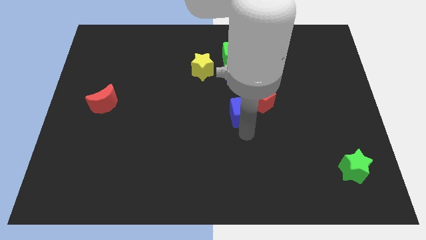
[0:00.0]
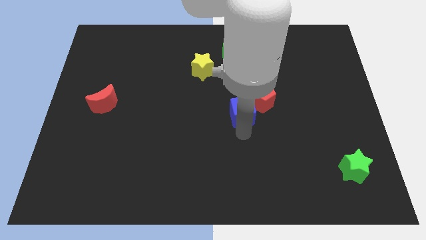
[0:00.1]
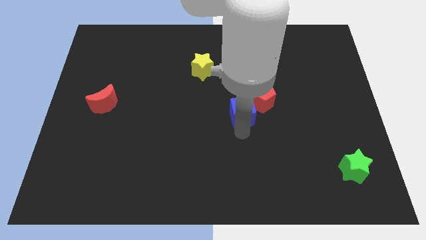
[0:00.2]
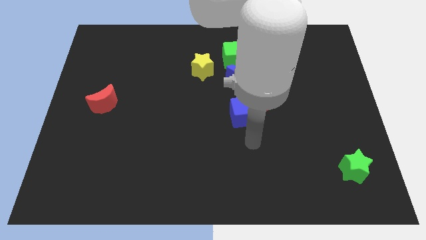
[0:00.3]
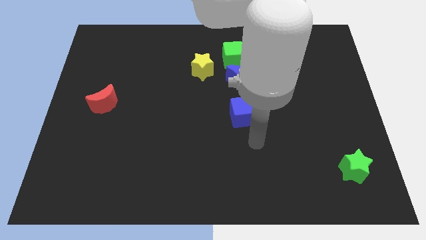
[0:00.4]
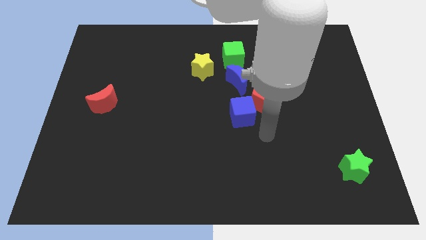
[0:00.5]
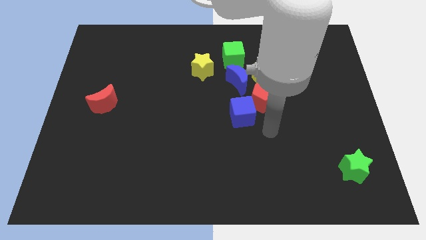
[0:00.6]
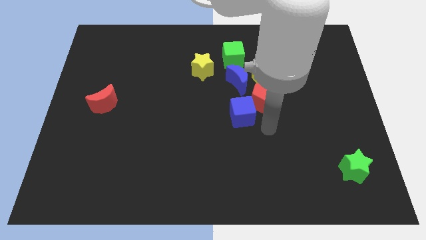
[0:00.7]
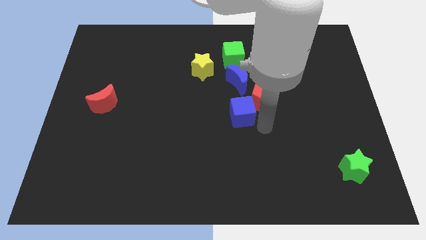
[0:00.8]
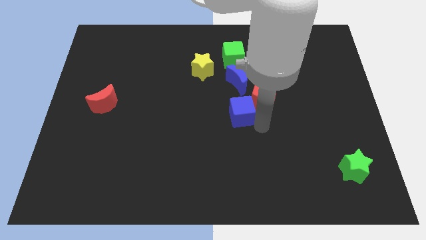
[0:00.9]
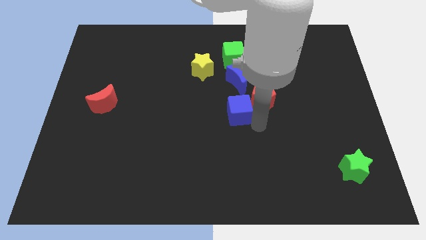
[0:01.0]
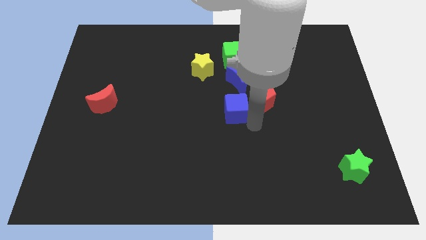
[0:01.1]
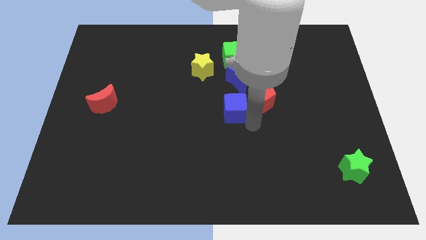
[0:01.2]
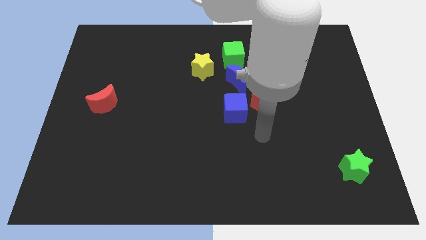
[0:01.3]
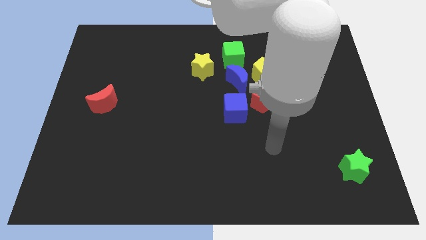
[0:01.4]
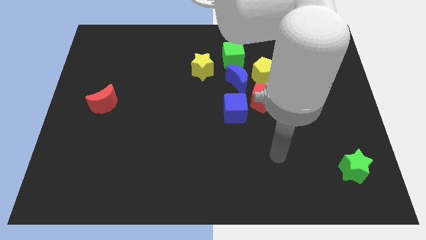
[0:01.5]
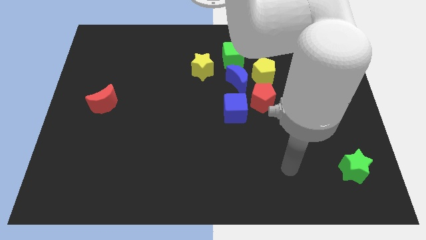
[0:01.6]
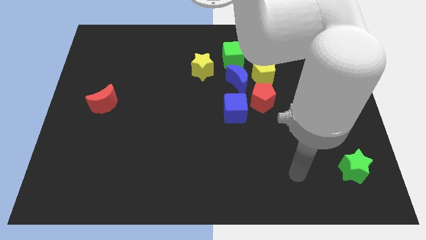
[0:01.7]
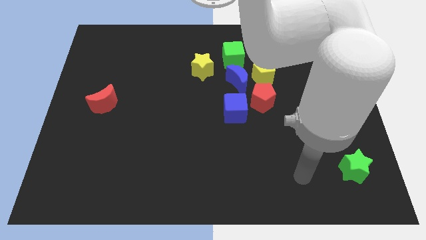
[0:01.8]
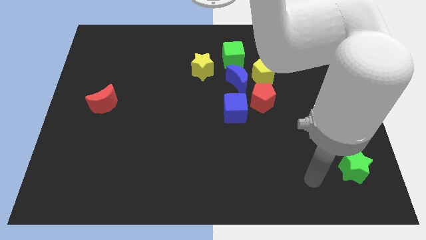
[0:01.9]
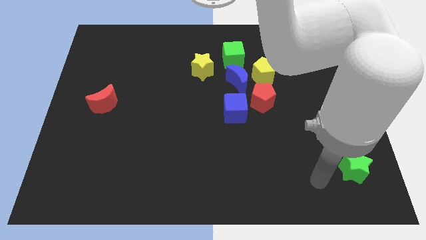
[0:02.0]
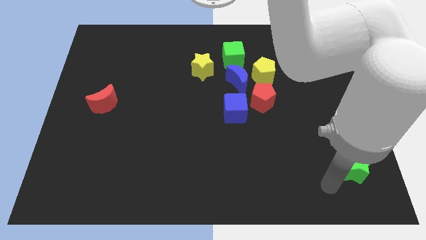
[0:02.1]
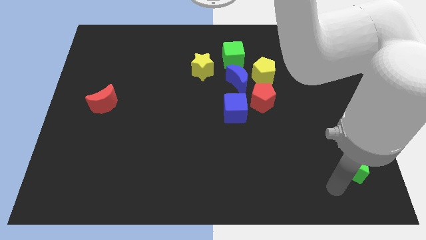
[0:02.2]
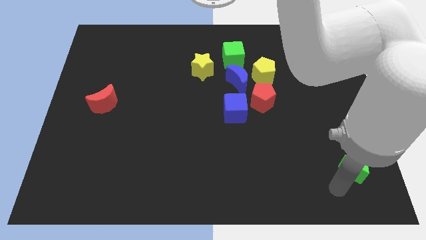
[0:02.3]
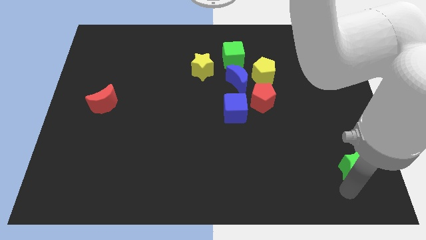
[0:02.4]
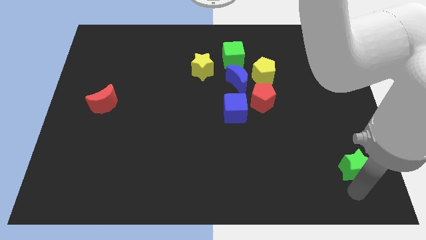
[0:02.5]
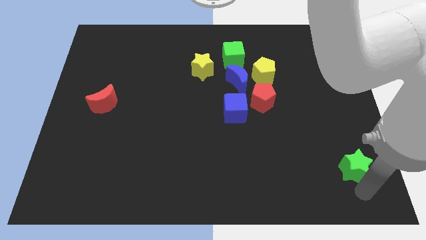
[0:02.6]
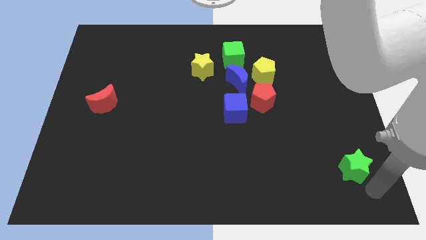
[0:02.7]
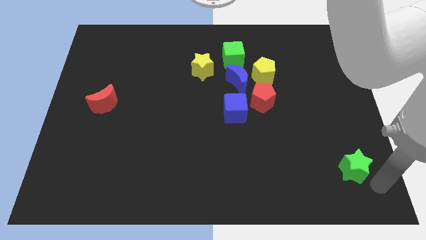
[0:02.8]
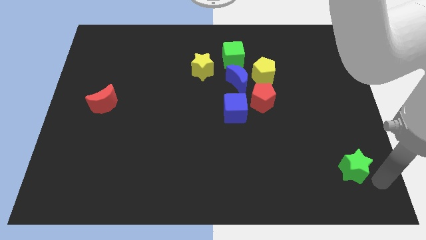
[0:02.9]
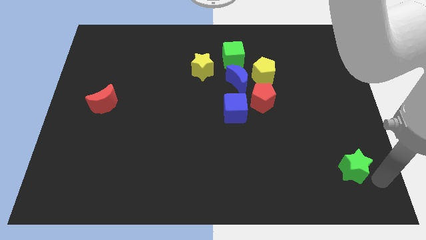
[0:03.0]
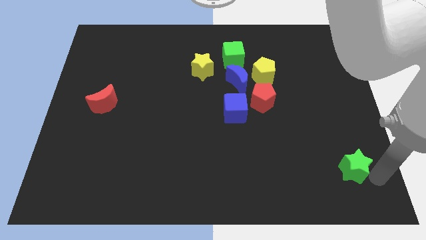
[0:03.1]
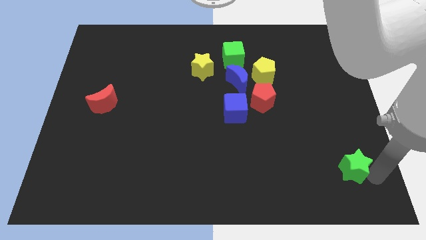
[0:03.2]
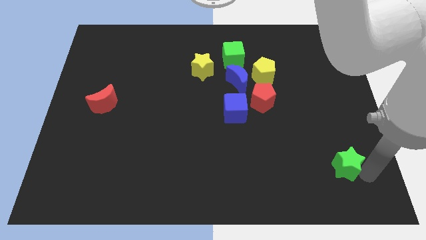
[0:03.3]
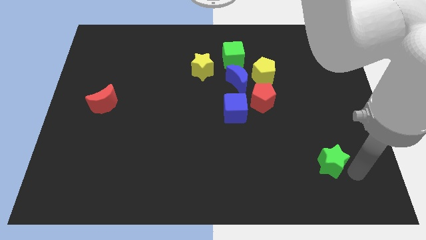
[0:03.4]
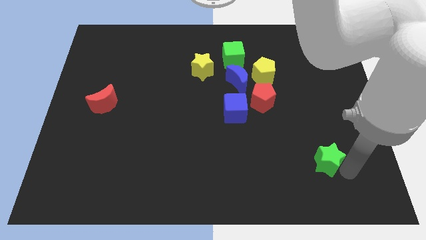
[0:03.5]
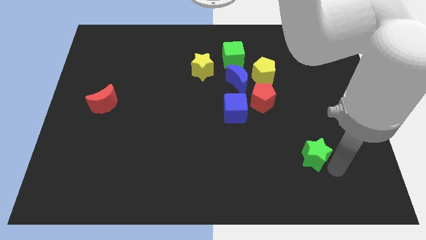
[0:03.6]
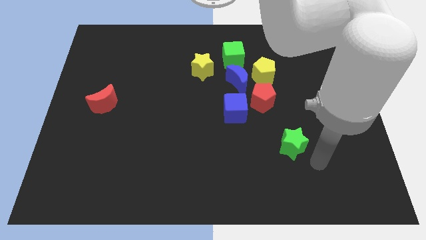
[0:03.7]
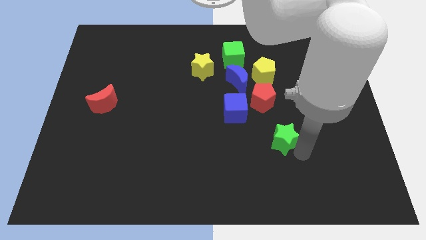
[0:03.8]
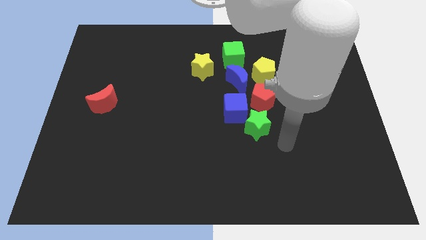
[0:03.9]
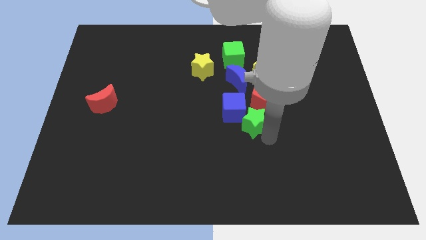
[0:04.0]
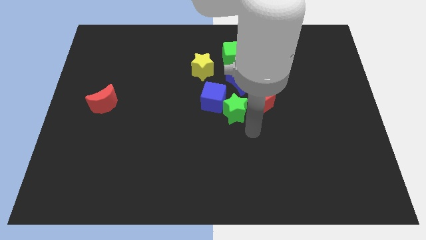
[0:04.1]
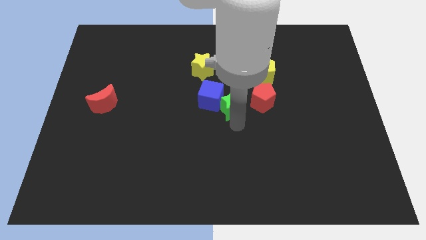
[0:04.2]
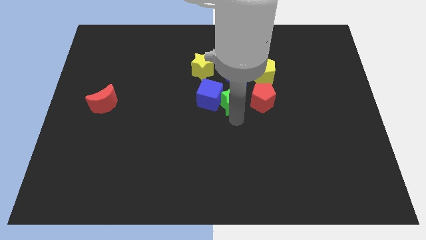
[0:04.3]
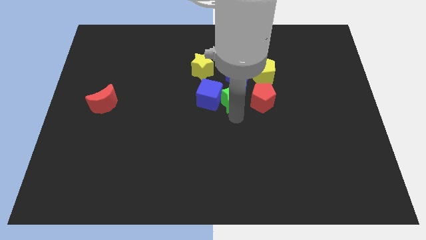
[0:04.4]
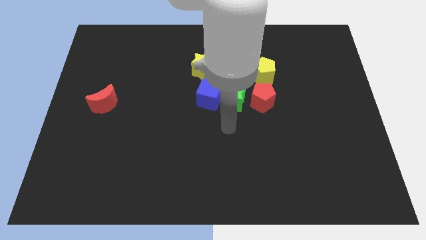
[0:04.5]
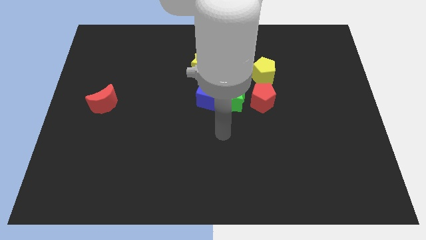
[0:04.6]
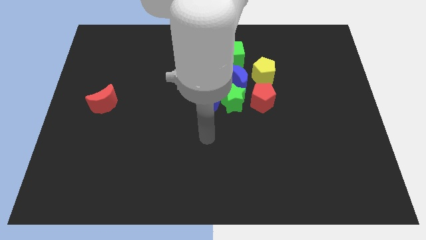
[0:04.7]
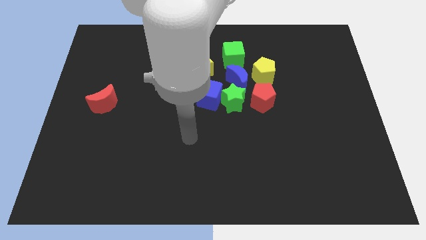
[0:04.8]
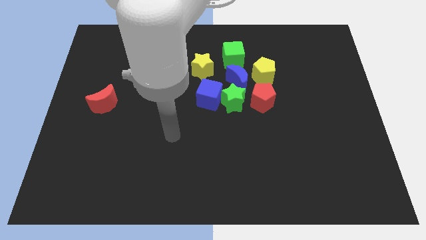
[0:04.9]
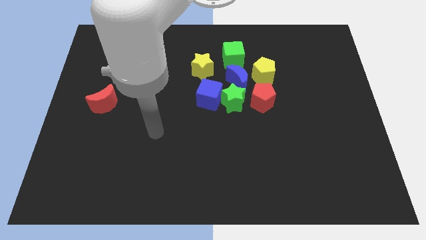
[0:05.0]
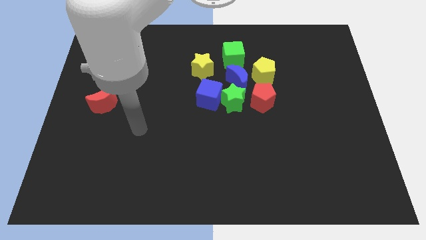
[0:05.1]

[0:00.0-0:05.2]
push the green star into the blue cube

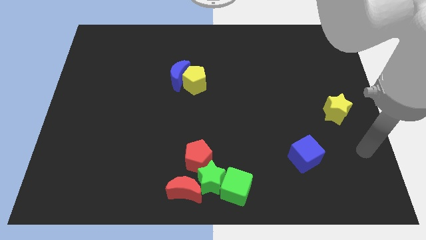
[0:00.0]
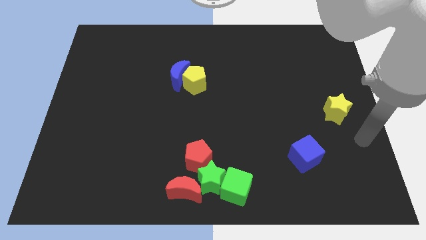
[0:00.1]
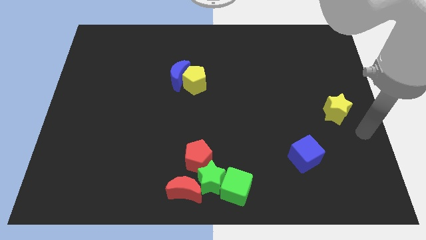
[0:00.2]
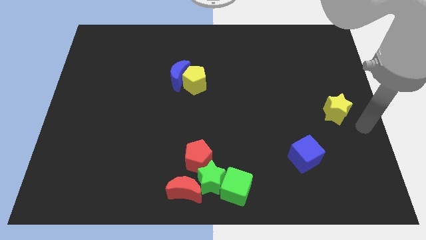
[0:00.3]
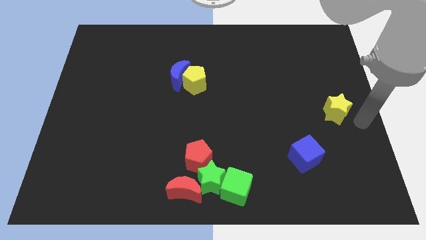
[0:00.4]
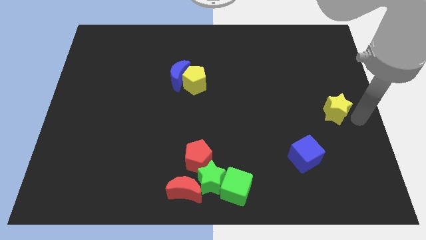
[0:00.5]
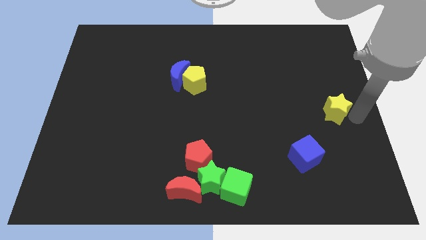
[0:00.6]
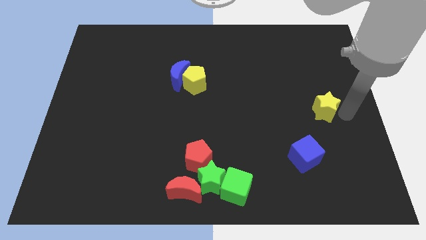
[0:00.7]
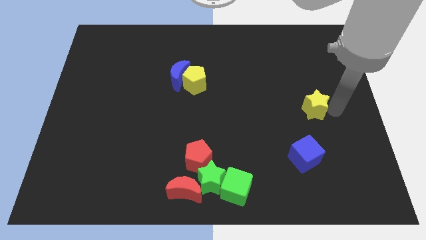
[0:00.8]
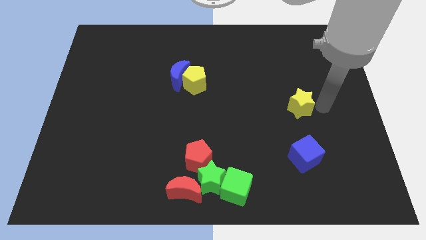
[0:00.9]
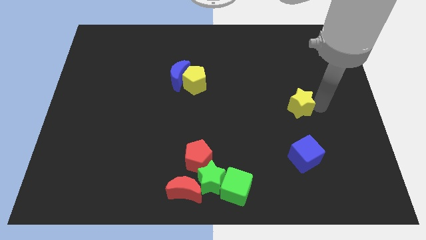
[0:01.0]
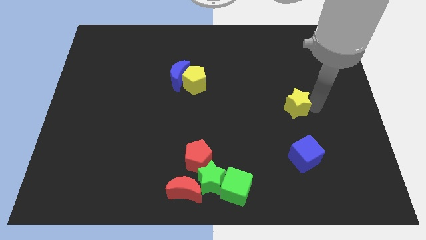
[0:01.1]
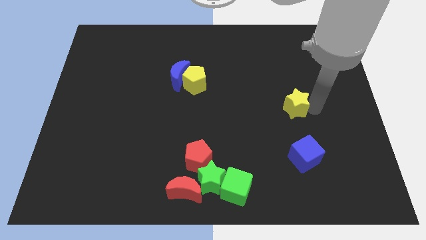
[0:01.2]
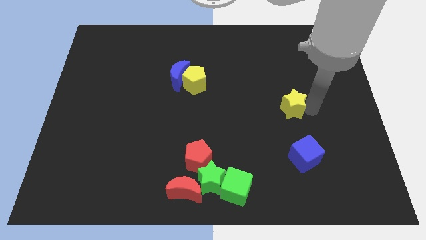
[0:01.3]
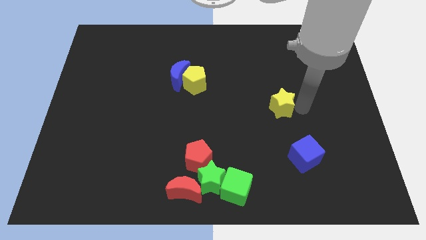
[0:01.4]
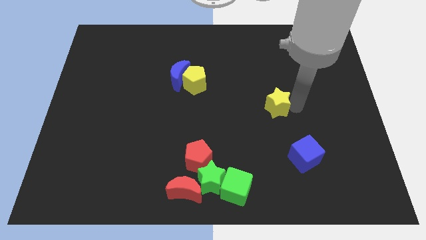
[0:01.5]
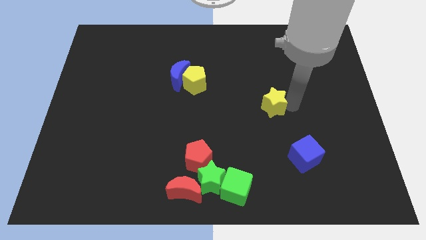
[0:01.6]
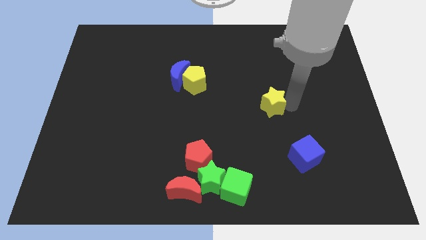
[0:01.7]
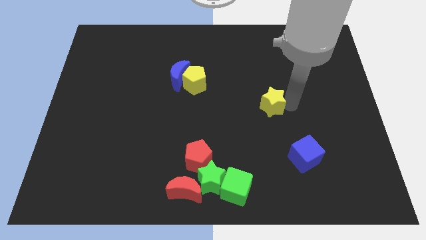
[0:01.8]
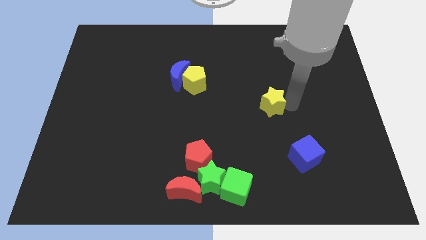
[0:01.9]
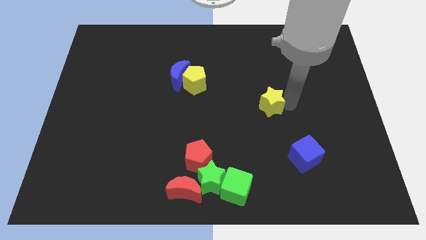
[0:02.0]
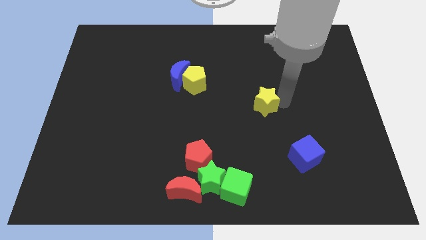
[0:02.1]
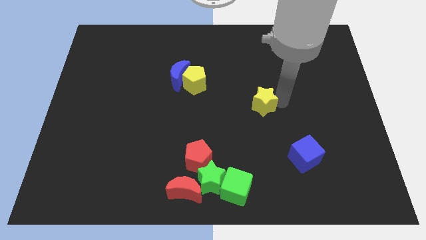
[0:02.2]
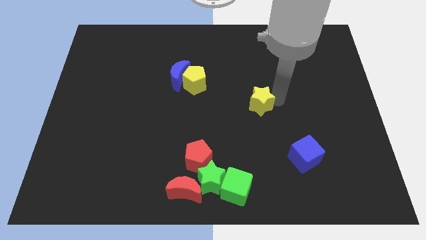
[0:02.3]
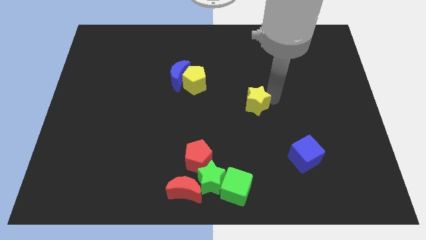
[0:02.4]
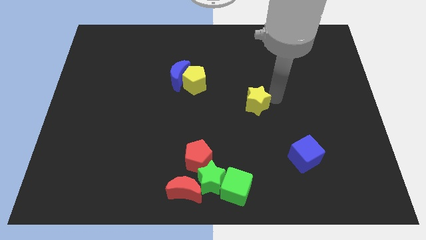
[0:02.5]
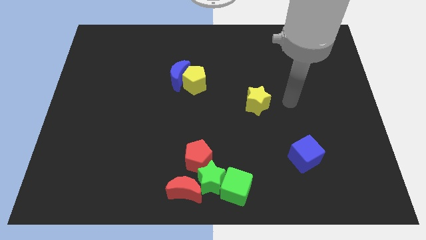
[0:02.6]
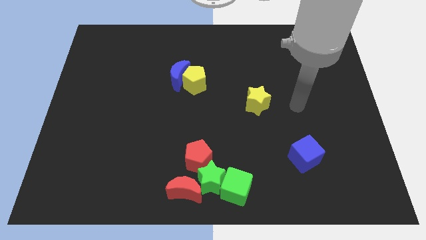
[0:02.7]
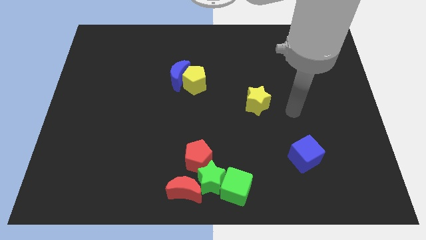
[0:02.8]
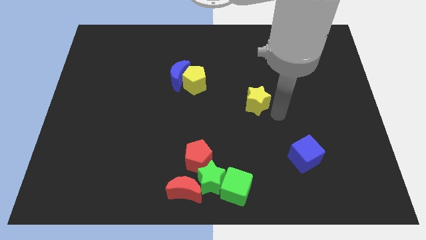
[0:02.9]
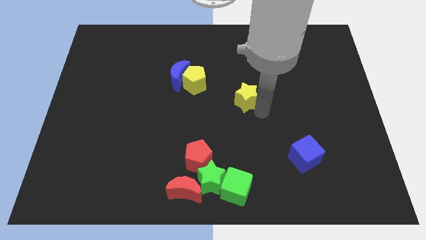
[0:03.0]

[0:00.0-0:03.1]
move yellow star towards the center

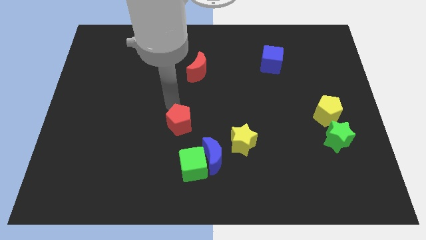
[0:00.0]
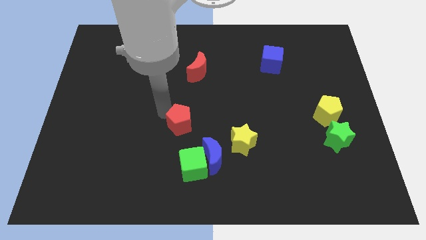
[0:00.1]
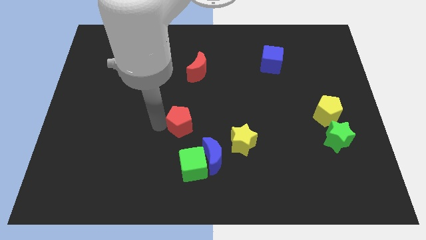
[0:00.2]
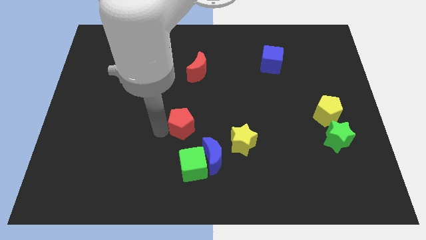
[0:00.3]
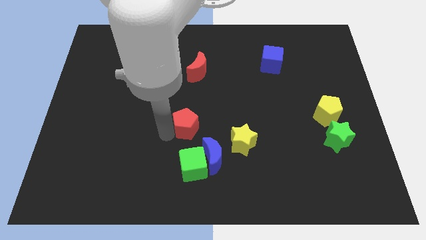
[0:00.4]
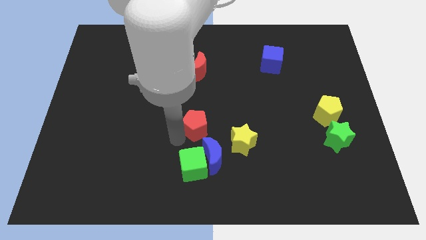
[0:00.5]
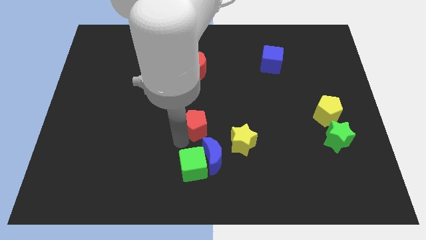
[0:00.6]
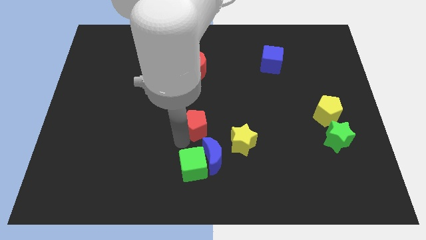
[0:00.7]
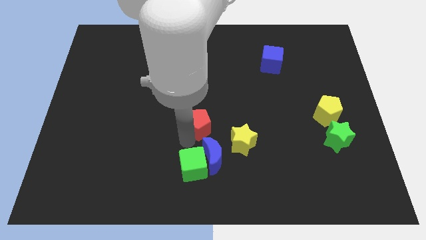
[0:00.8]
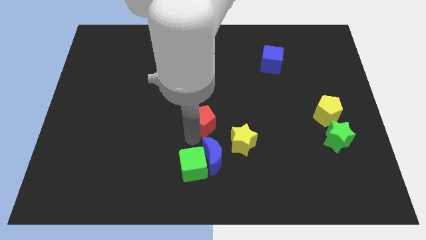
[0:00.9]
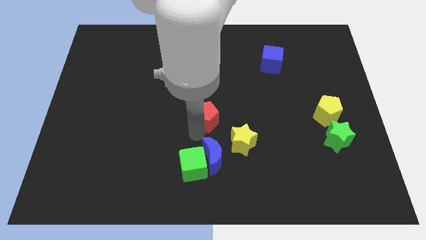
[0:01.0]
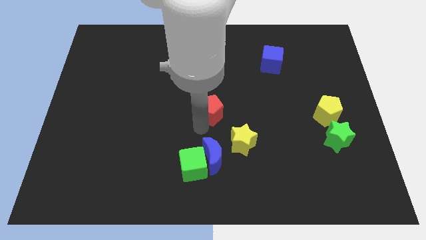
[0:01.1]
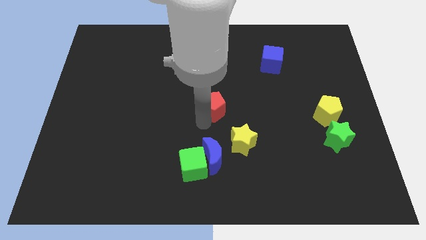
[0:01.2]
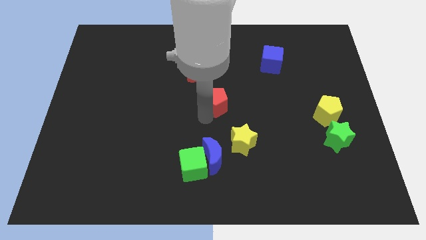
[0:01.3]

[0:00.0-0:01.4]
place the red pentagon in between the red moon and yellow star
